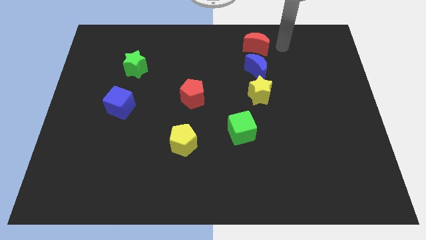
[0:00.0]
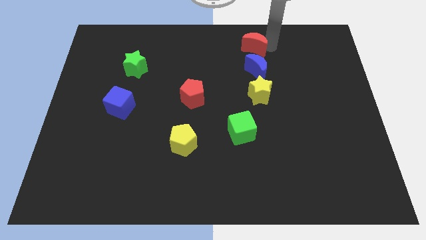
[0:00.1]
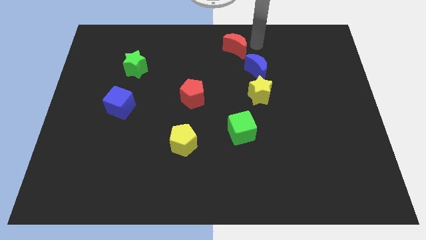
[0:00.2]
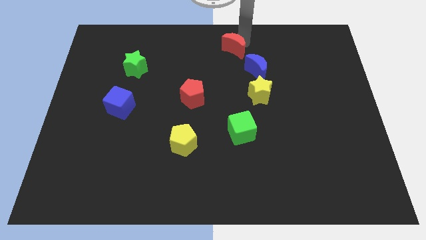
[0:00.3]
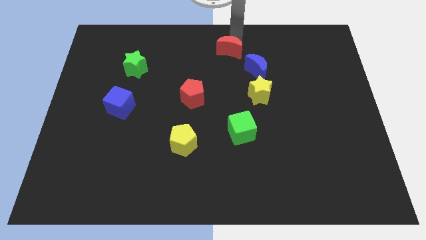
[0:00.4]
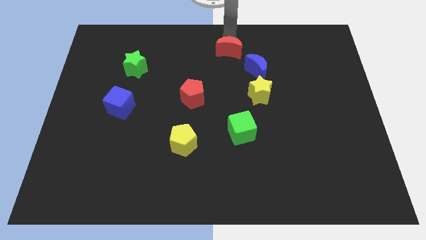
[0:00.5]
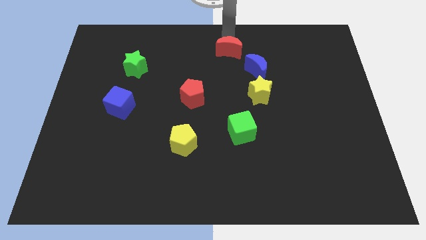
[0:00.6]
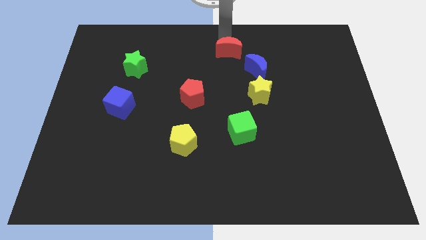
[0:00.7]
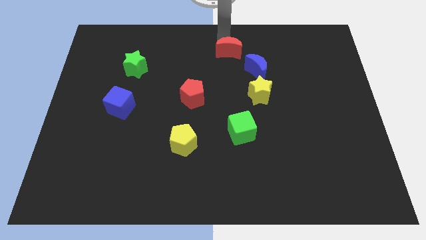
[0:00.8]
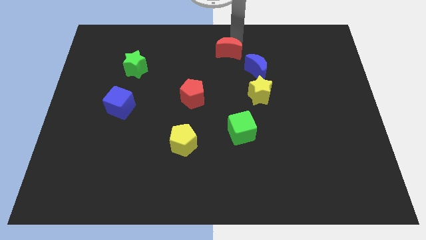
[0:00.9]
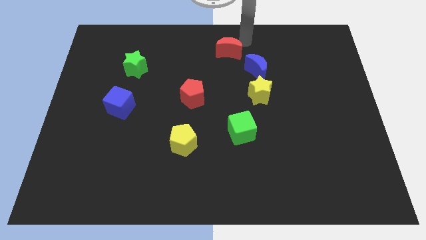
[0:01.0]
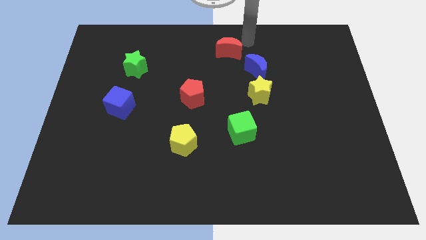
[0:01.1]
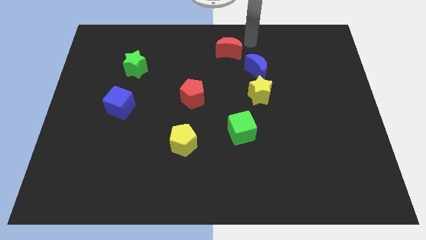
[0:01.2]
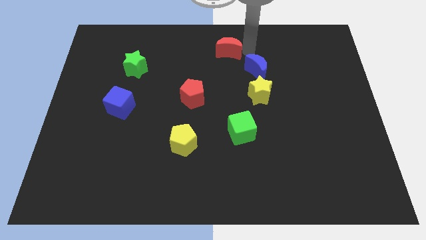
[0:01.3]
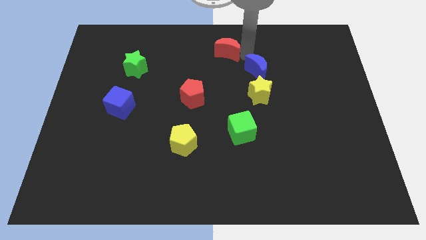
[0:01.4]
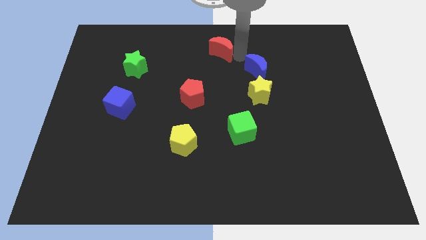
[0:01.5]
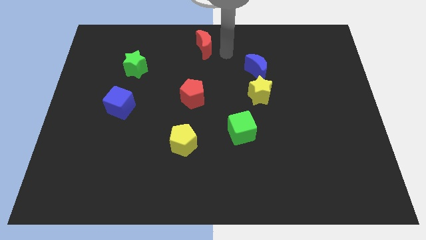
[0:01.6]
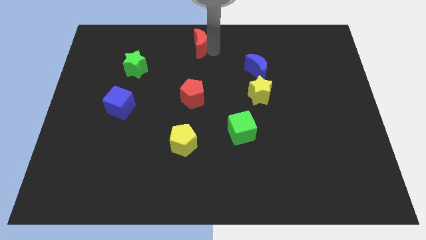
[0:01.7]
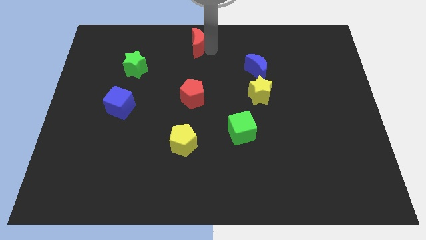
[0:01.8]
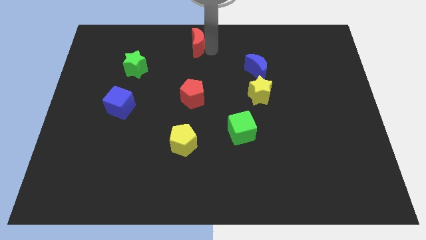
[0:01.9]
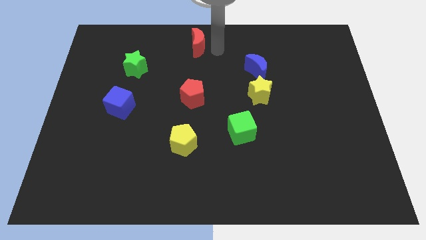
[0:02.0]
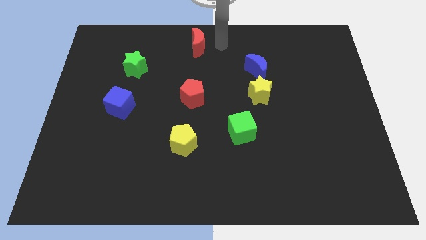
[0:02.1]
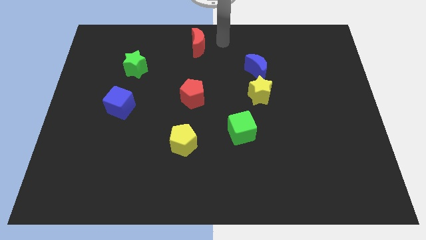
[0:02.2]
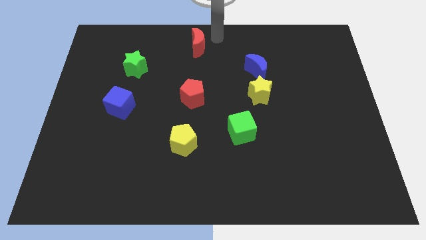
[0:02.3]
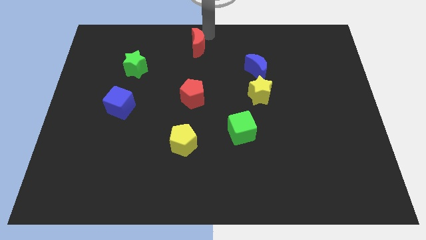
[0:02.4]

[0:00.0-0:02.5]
place the red crescent at the top center of the board

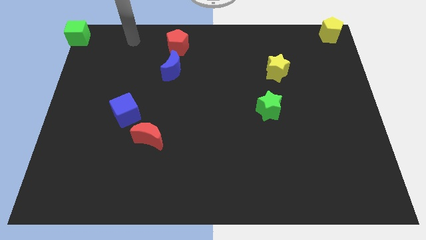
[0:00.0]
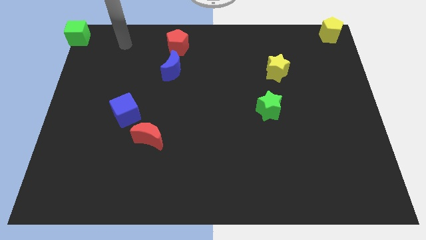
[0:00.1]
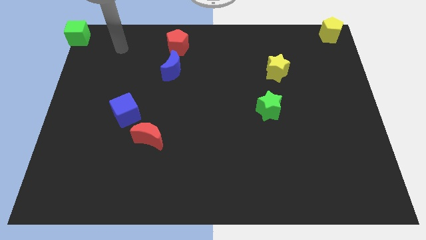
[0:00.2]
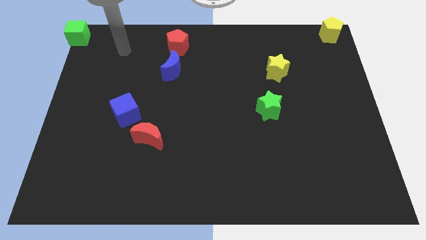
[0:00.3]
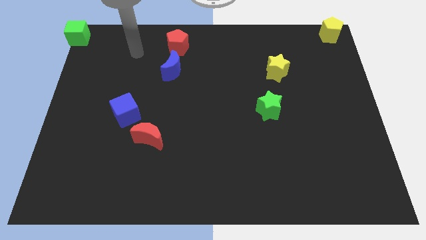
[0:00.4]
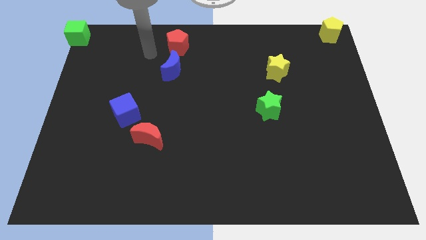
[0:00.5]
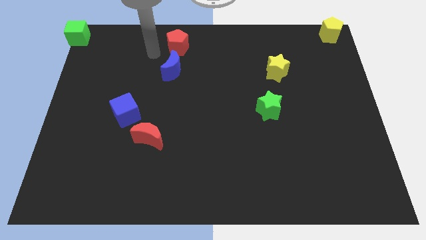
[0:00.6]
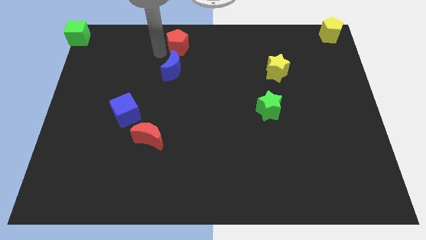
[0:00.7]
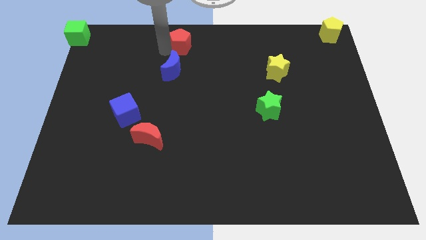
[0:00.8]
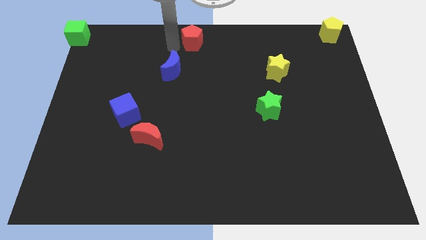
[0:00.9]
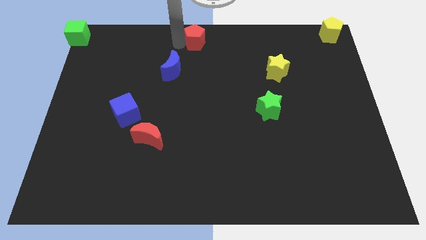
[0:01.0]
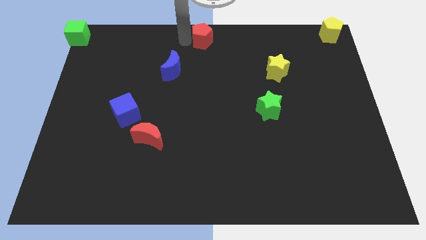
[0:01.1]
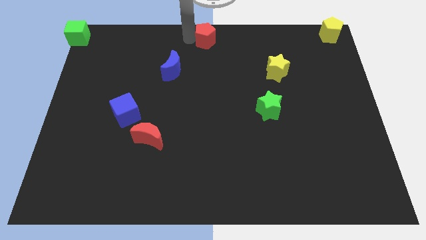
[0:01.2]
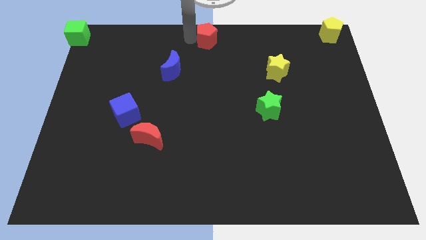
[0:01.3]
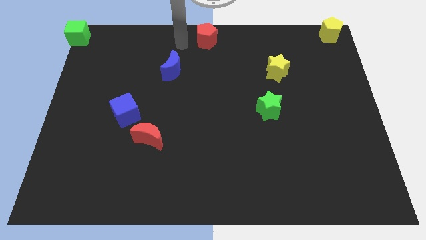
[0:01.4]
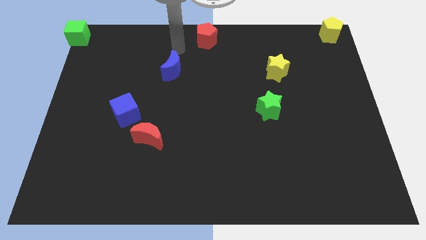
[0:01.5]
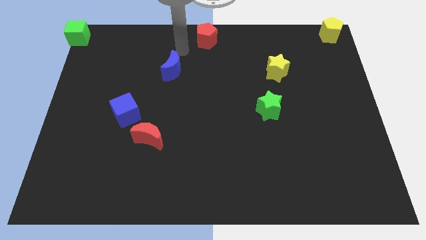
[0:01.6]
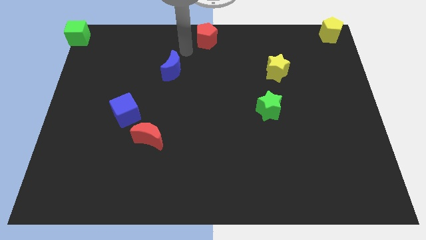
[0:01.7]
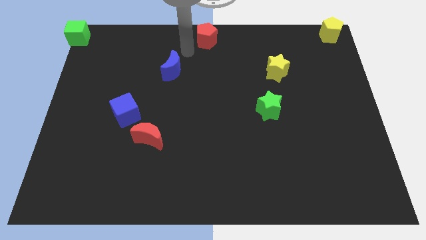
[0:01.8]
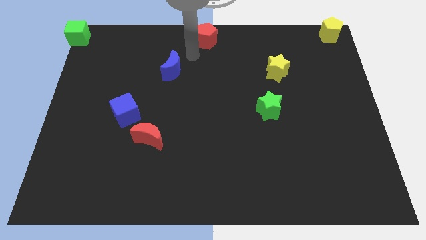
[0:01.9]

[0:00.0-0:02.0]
push the red pentagon to the top middle of the board

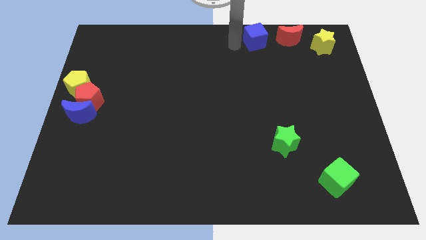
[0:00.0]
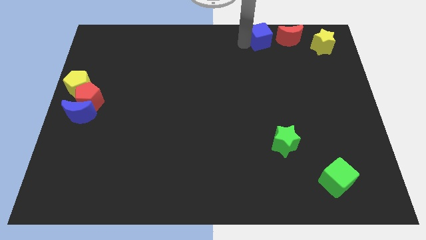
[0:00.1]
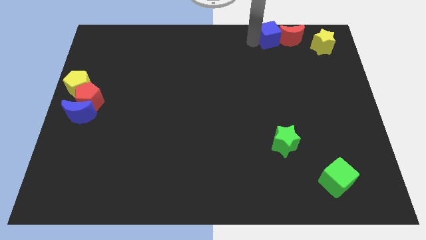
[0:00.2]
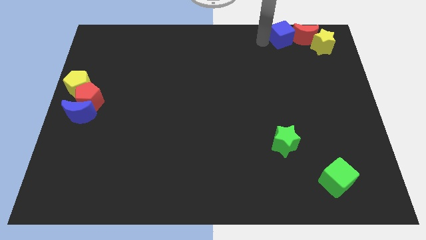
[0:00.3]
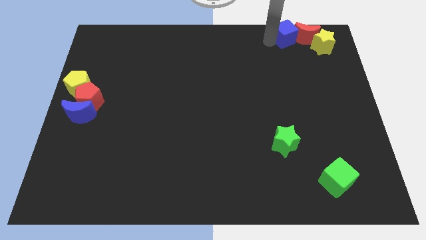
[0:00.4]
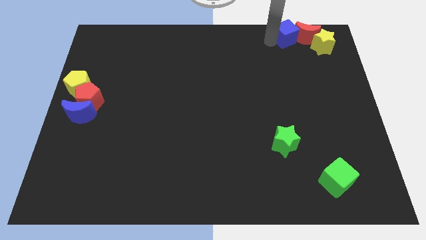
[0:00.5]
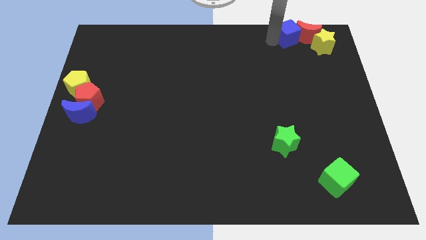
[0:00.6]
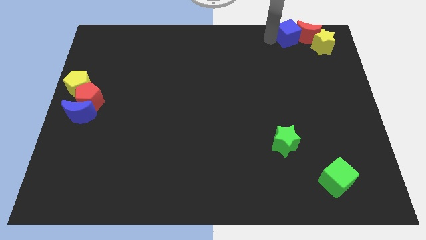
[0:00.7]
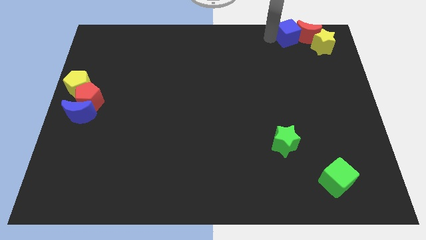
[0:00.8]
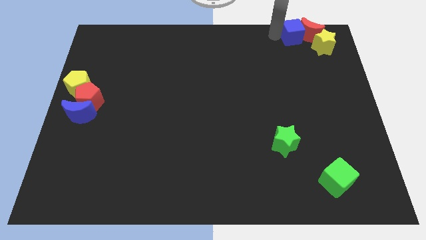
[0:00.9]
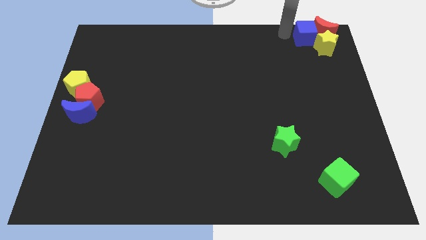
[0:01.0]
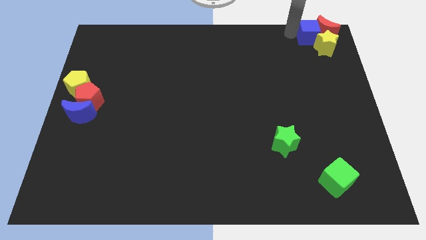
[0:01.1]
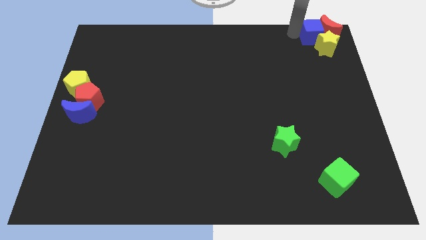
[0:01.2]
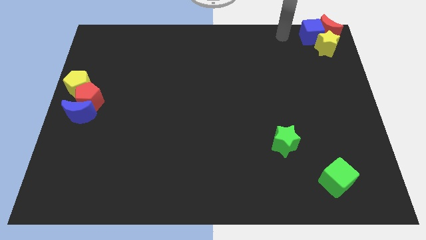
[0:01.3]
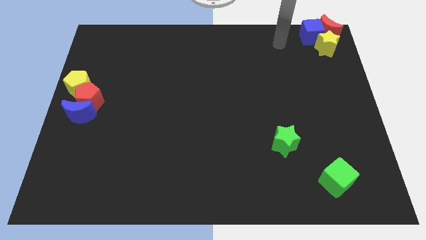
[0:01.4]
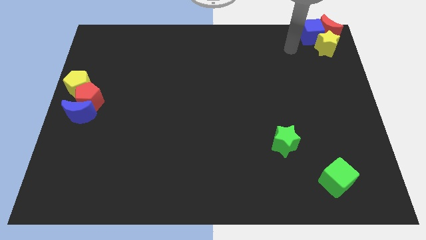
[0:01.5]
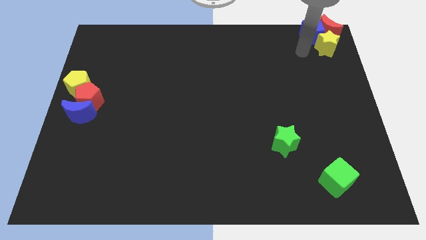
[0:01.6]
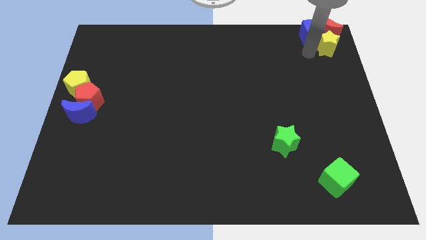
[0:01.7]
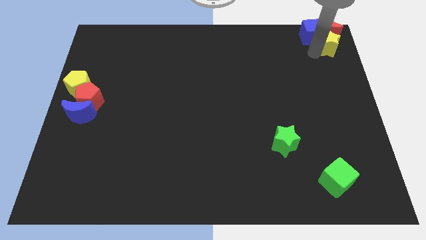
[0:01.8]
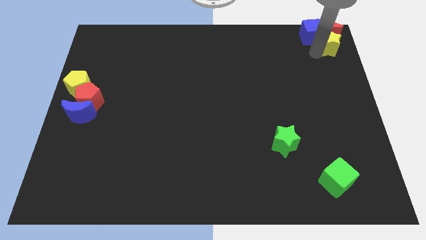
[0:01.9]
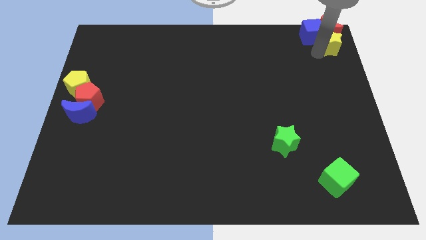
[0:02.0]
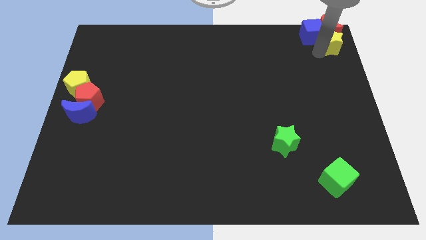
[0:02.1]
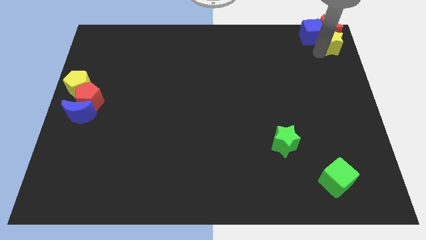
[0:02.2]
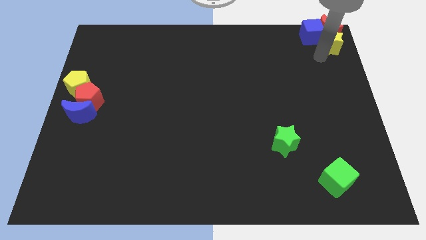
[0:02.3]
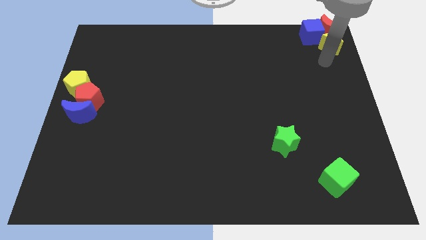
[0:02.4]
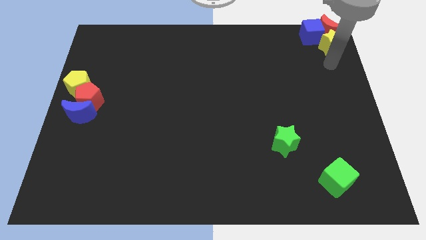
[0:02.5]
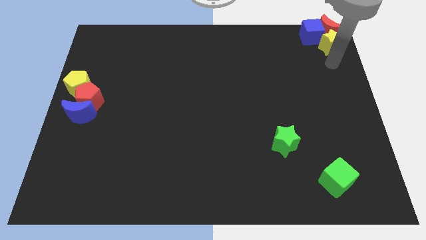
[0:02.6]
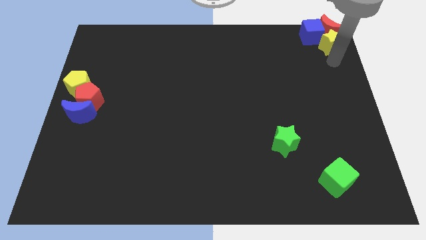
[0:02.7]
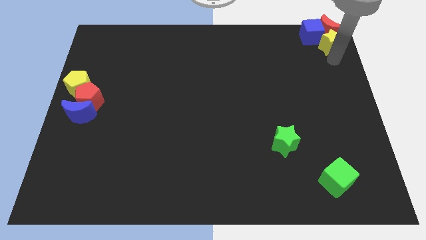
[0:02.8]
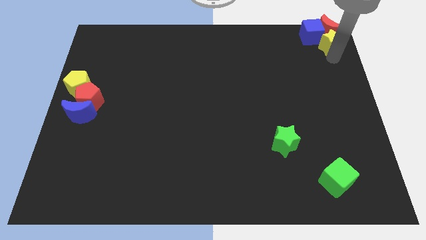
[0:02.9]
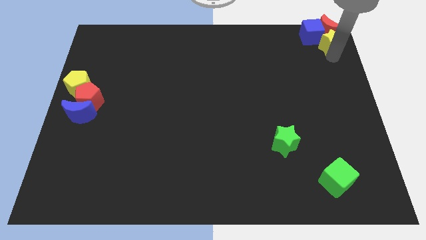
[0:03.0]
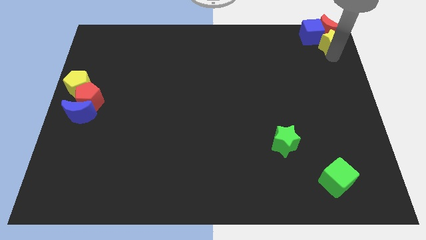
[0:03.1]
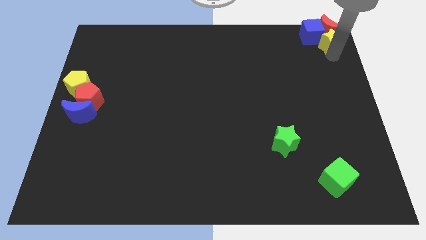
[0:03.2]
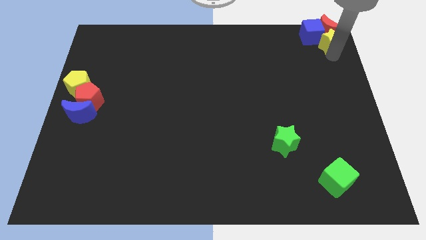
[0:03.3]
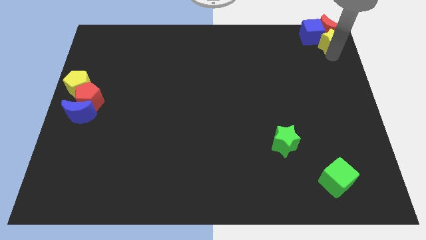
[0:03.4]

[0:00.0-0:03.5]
push the blue cube into the red moon at the top right corner

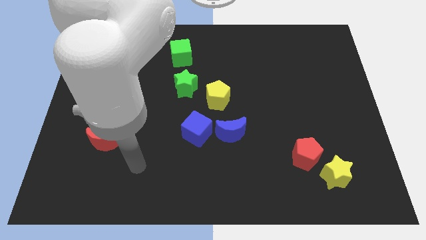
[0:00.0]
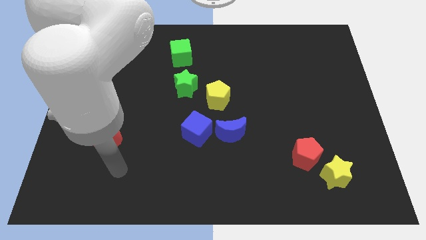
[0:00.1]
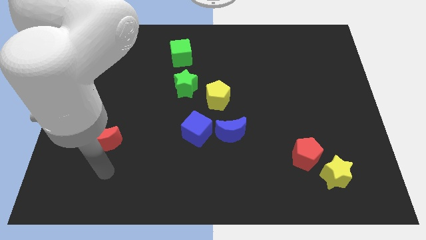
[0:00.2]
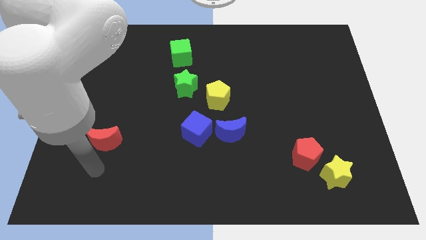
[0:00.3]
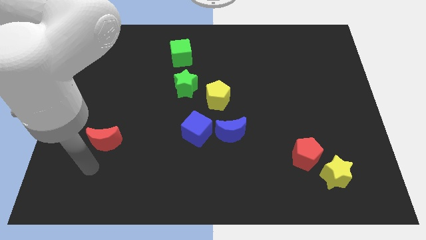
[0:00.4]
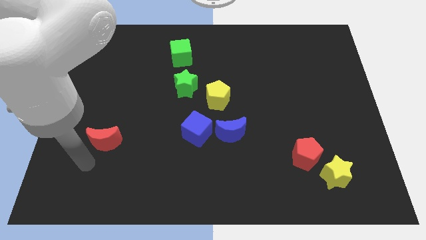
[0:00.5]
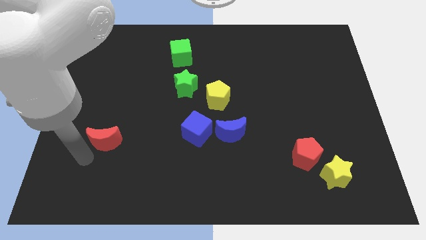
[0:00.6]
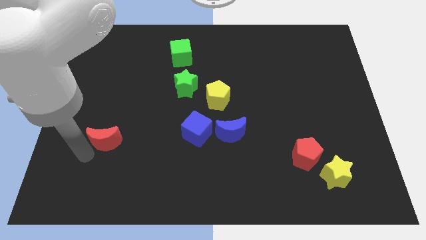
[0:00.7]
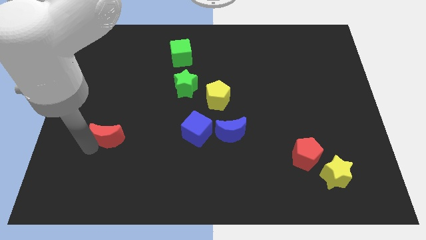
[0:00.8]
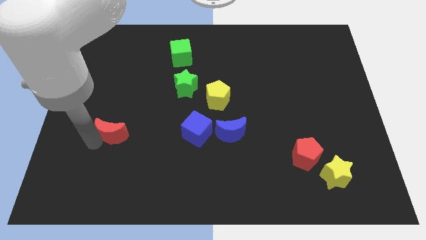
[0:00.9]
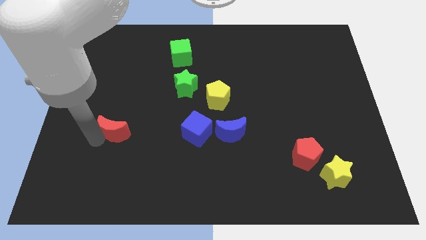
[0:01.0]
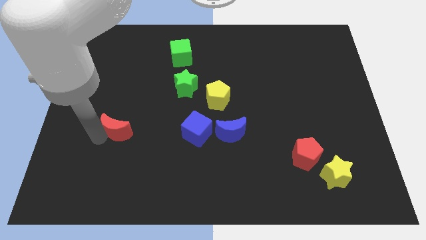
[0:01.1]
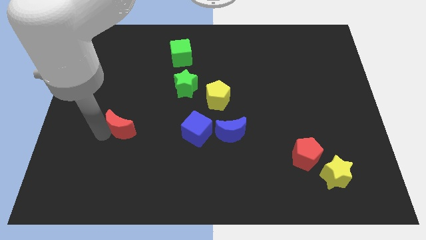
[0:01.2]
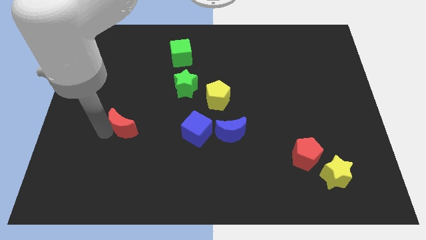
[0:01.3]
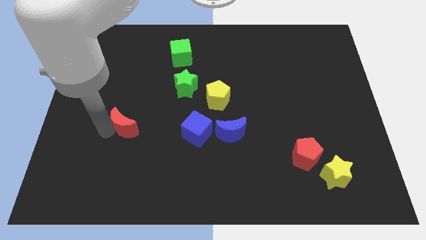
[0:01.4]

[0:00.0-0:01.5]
move the red pentagon to the top of the board
